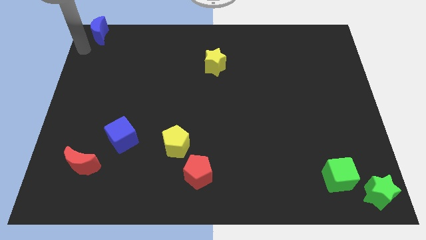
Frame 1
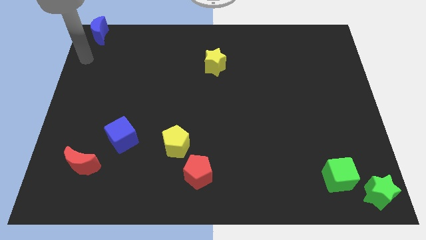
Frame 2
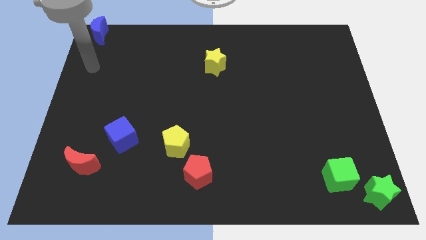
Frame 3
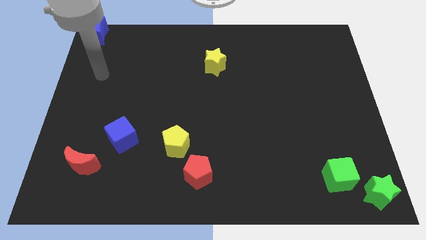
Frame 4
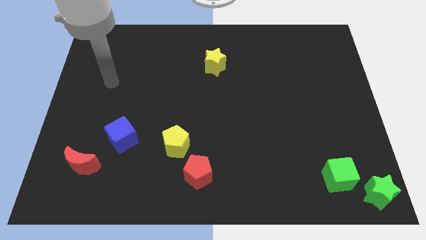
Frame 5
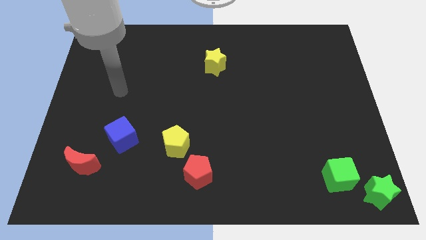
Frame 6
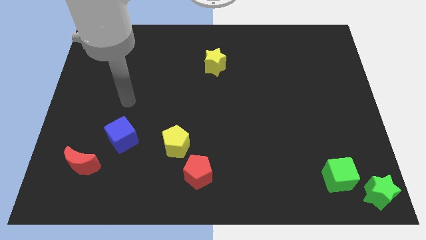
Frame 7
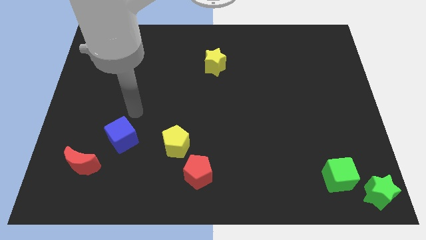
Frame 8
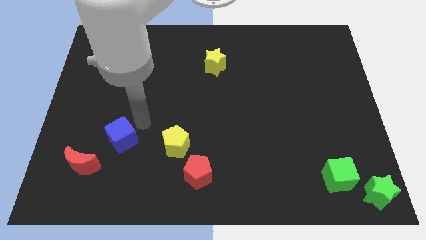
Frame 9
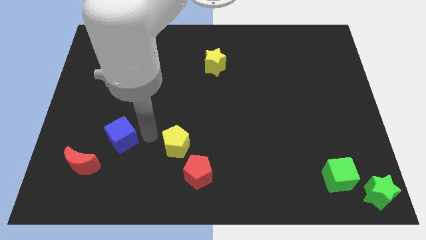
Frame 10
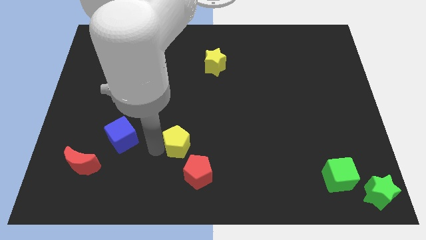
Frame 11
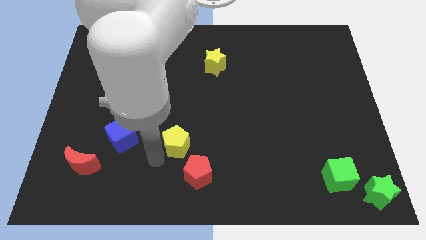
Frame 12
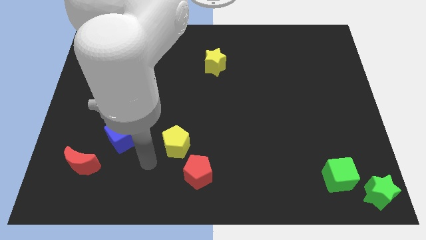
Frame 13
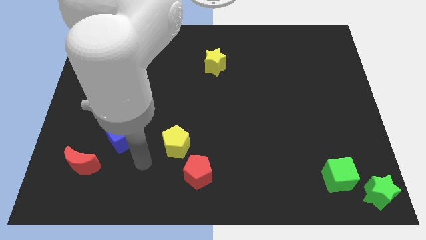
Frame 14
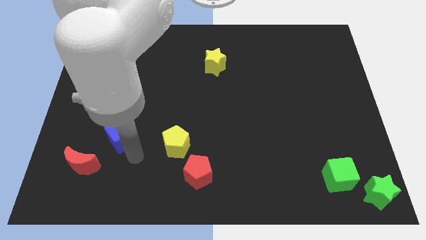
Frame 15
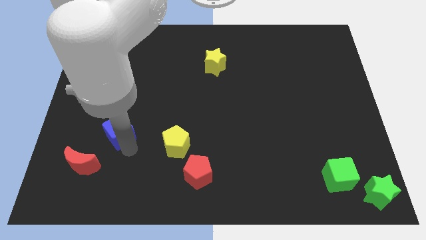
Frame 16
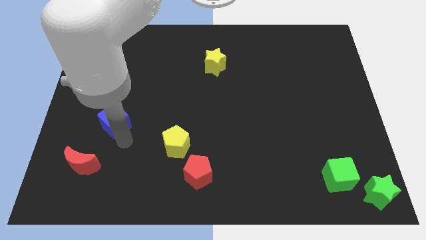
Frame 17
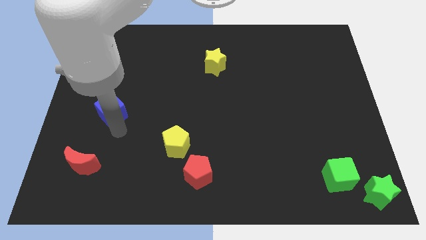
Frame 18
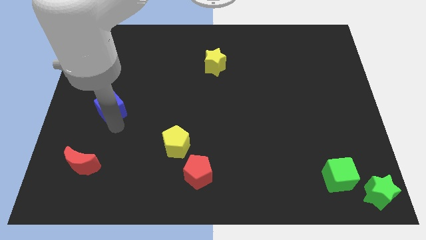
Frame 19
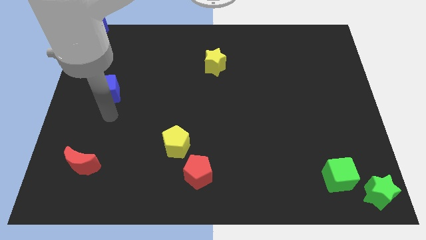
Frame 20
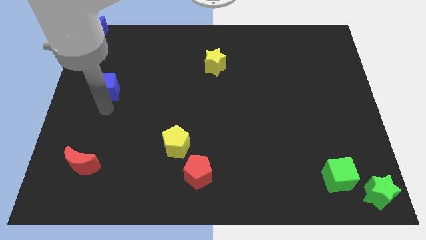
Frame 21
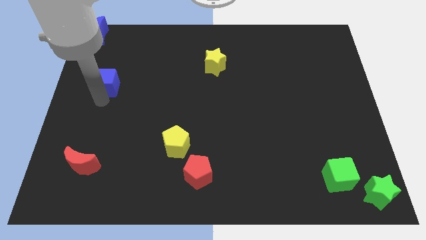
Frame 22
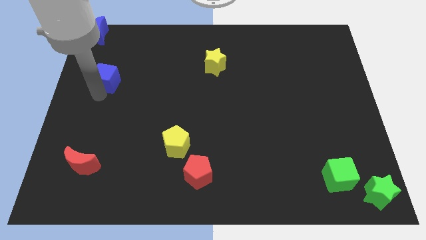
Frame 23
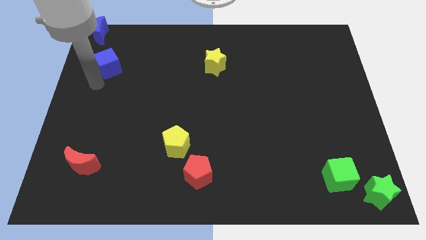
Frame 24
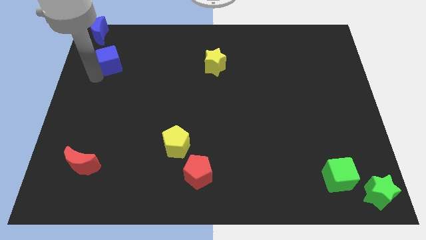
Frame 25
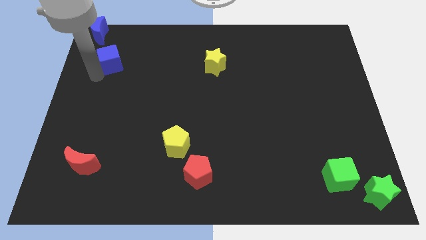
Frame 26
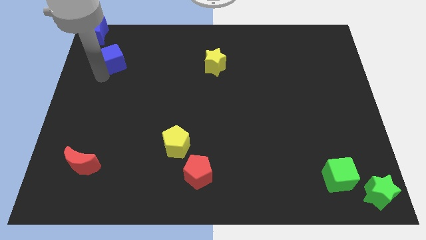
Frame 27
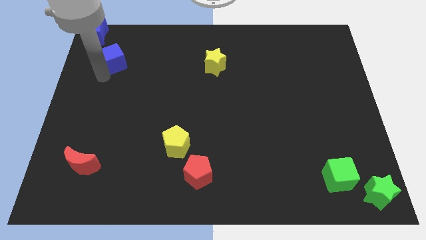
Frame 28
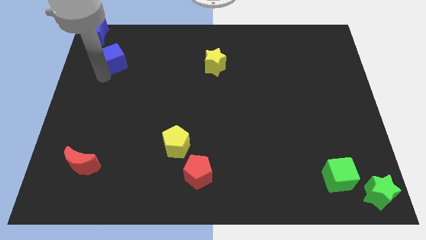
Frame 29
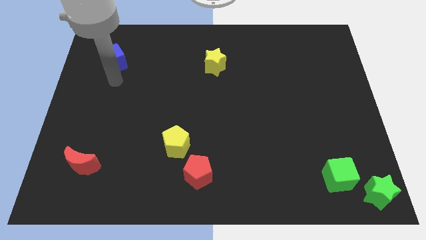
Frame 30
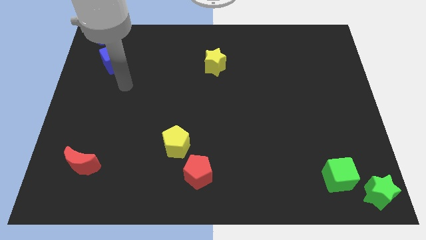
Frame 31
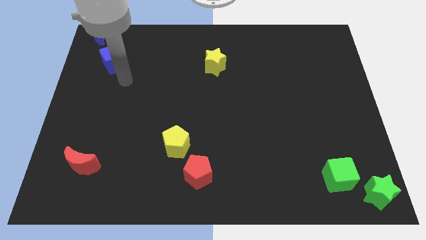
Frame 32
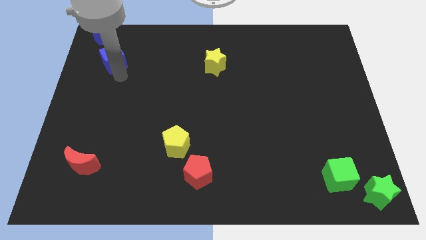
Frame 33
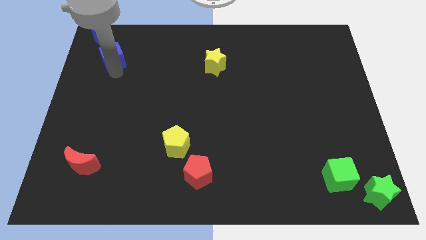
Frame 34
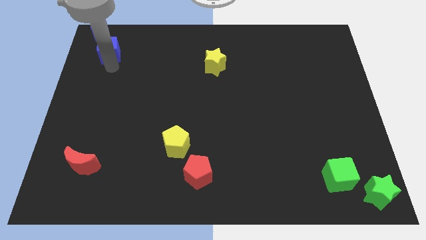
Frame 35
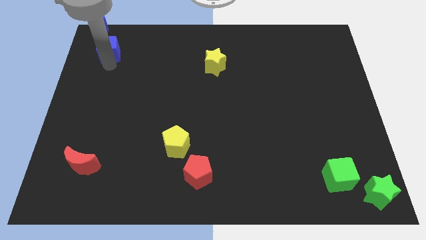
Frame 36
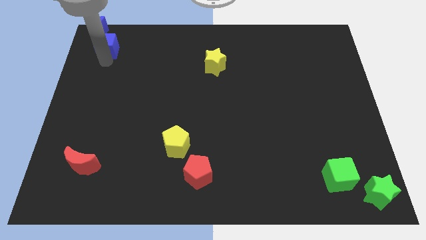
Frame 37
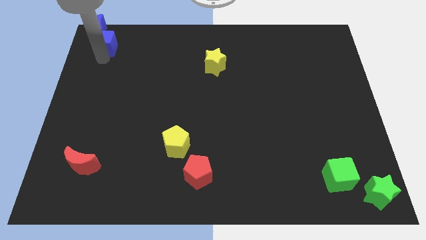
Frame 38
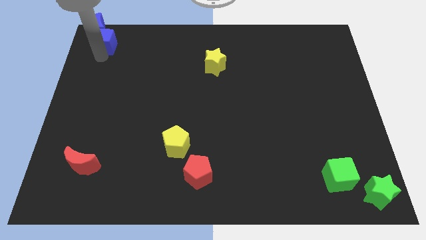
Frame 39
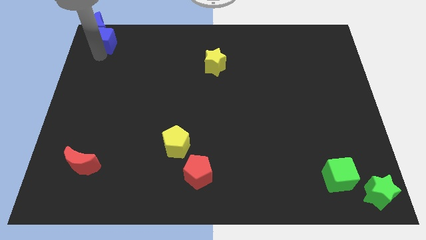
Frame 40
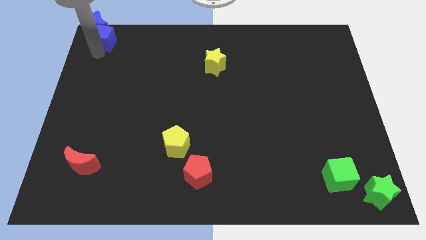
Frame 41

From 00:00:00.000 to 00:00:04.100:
move blue cube into blue moon

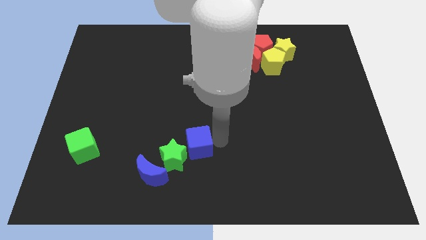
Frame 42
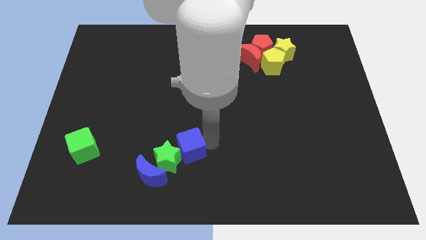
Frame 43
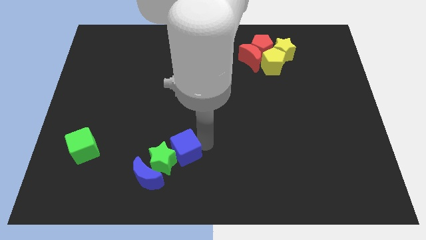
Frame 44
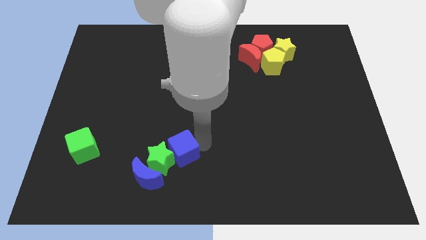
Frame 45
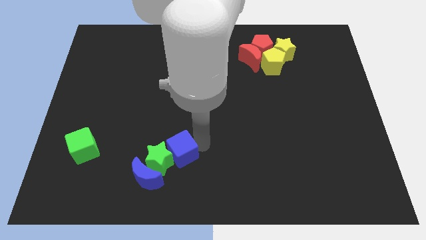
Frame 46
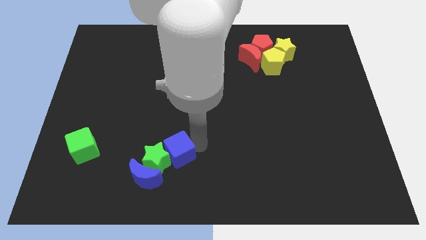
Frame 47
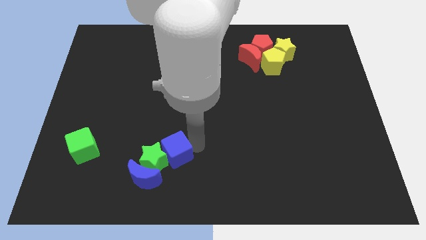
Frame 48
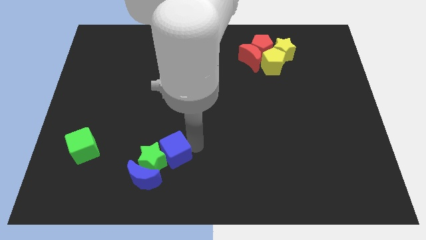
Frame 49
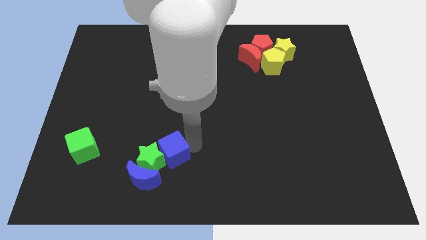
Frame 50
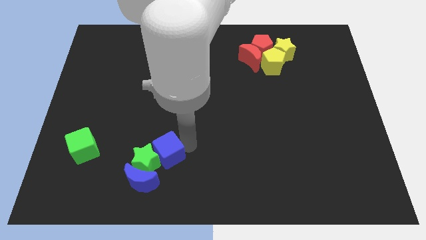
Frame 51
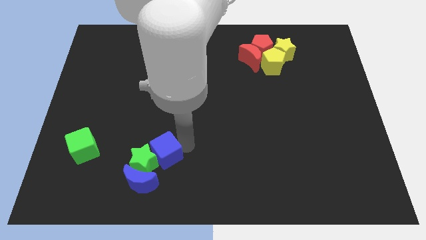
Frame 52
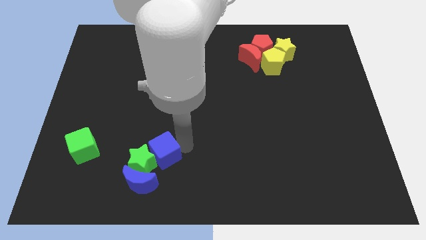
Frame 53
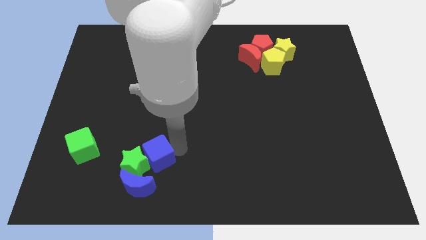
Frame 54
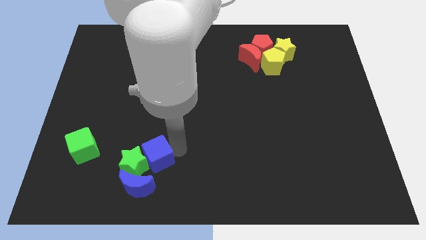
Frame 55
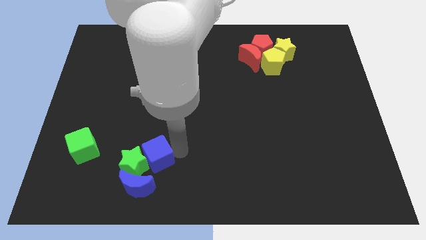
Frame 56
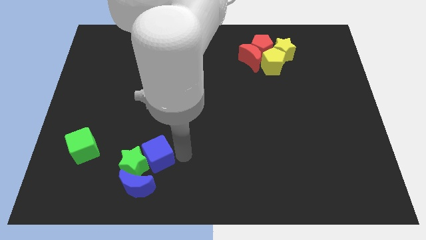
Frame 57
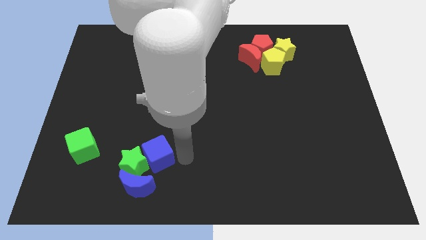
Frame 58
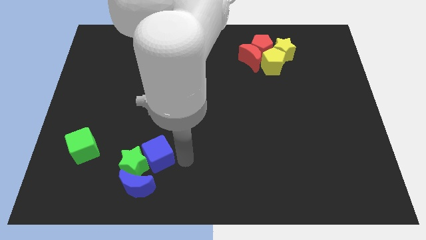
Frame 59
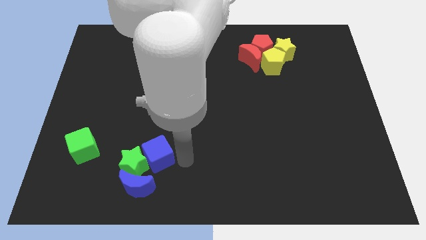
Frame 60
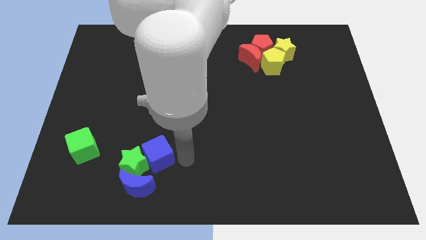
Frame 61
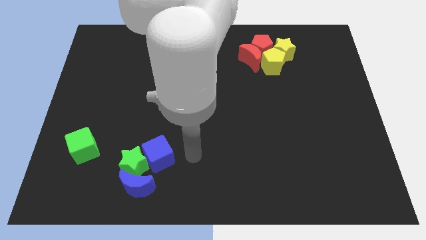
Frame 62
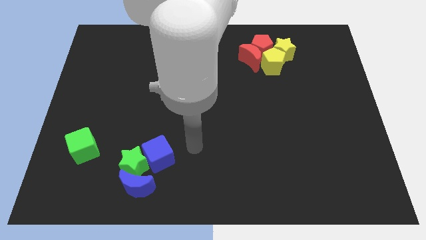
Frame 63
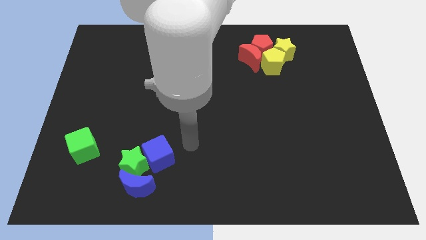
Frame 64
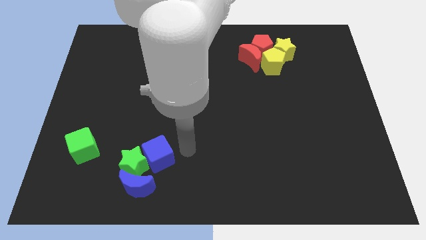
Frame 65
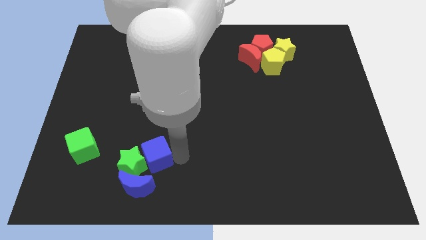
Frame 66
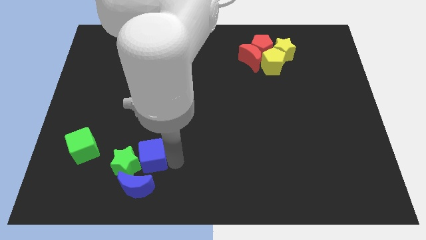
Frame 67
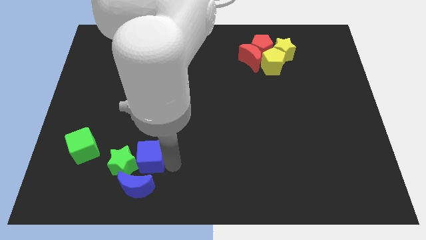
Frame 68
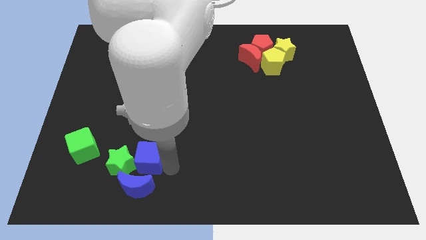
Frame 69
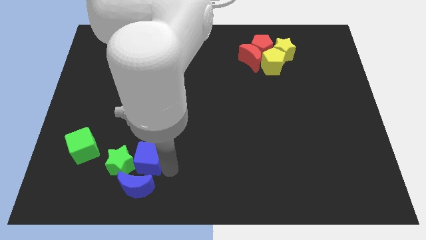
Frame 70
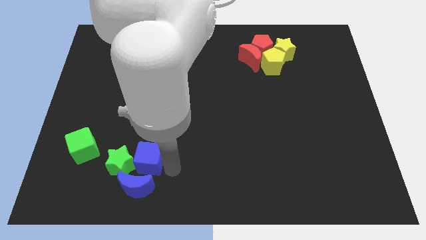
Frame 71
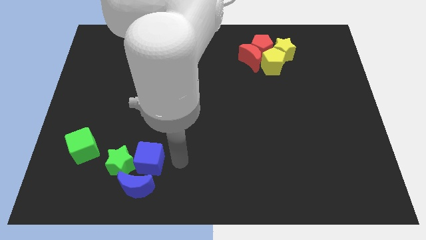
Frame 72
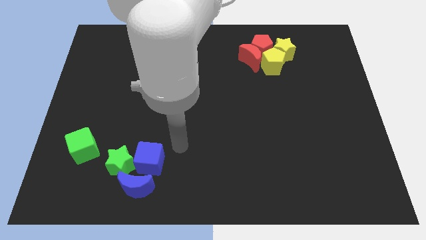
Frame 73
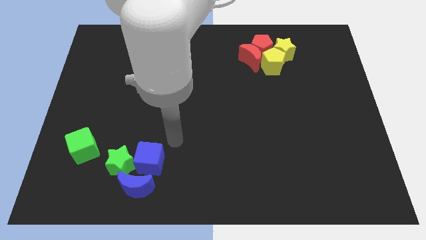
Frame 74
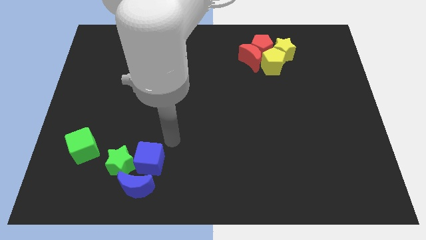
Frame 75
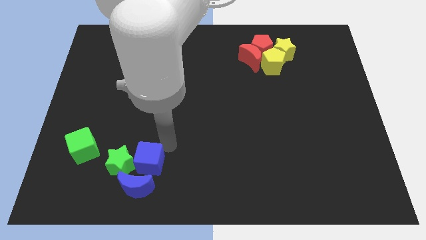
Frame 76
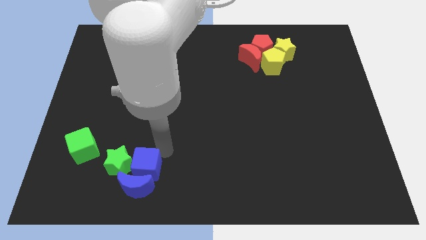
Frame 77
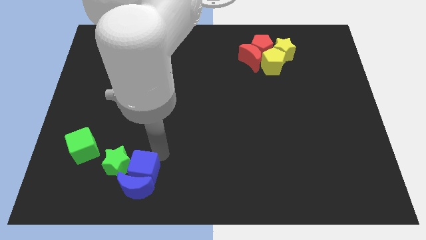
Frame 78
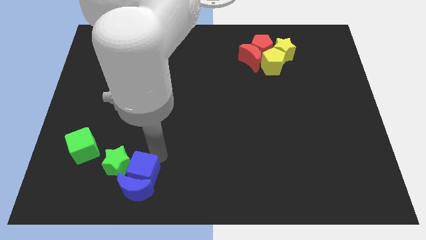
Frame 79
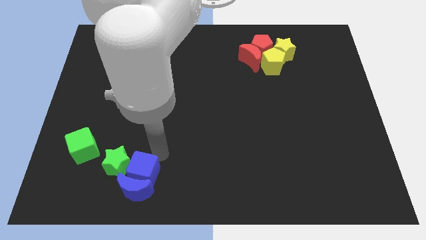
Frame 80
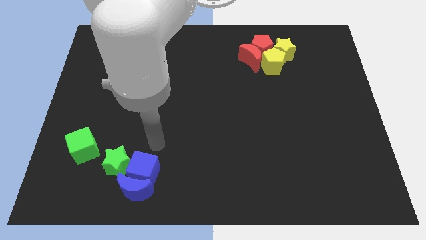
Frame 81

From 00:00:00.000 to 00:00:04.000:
push the blue cube into the blue crescent

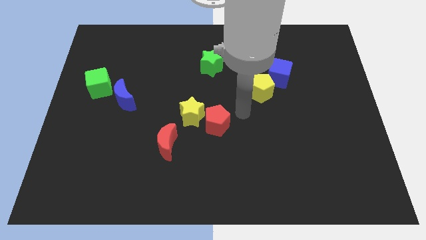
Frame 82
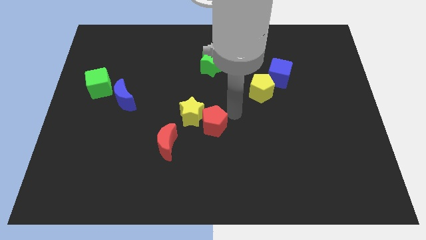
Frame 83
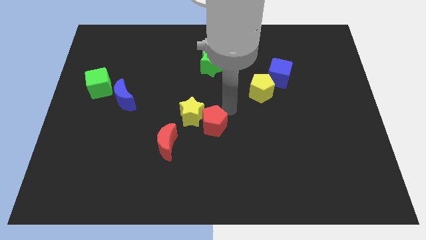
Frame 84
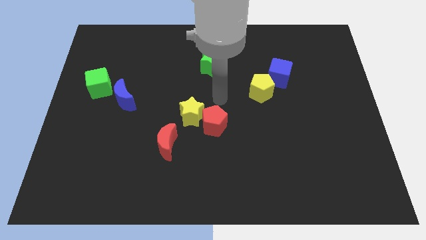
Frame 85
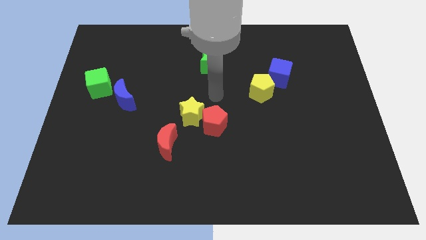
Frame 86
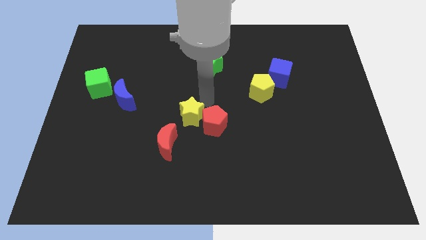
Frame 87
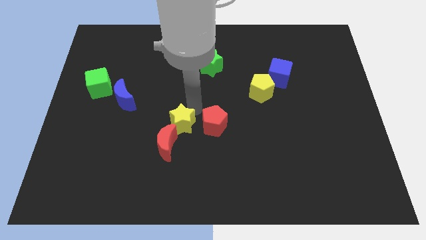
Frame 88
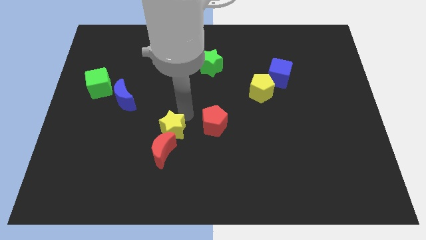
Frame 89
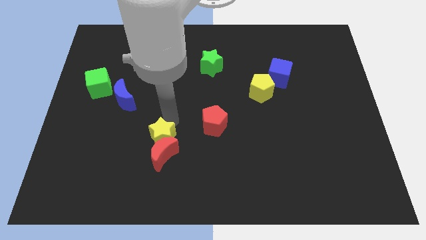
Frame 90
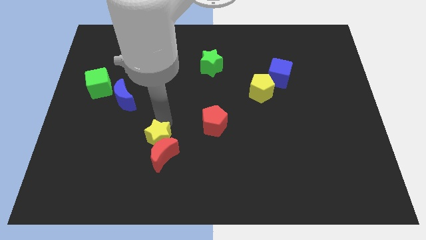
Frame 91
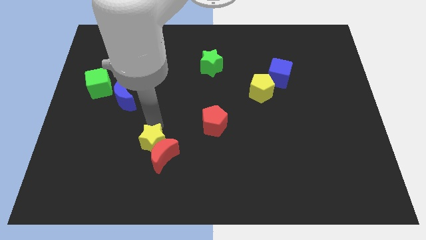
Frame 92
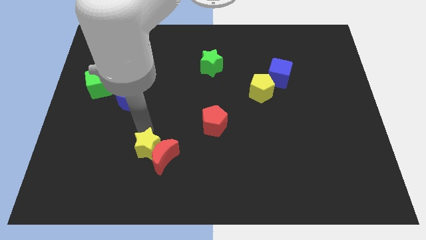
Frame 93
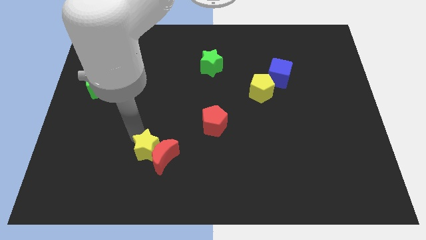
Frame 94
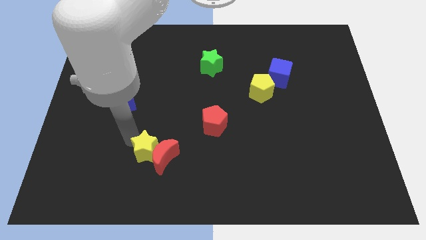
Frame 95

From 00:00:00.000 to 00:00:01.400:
push the yellow star into red crescent
